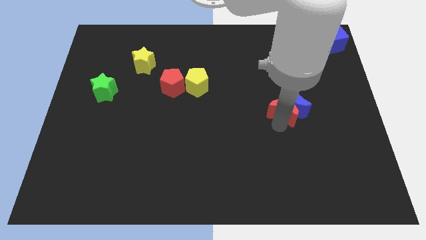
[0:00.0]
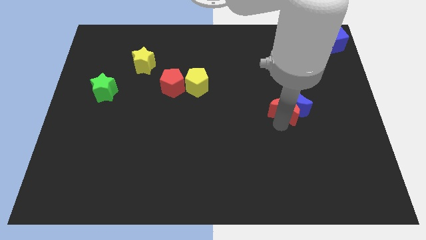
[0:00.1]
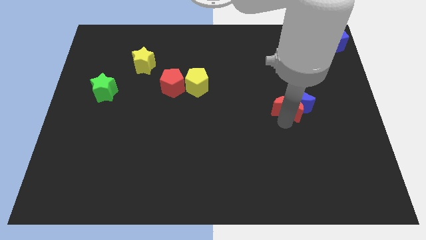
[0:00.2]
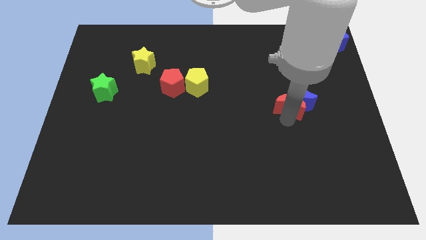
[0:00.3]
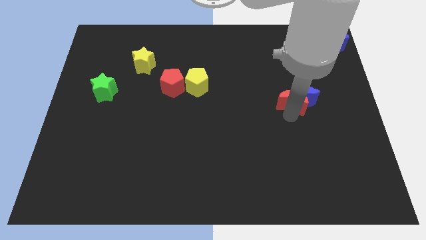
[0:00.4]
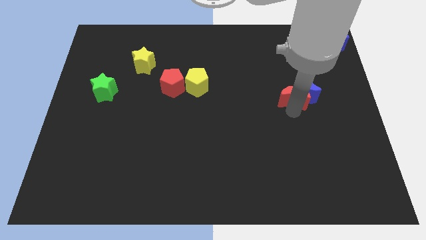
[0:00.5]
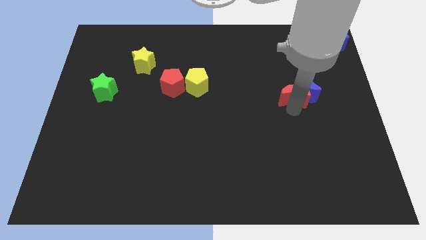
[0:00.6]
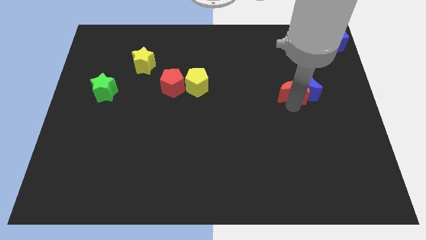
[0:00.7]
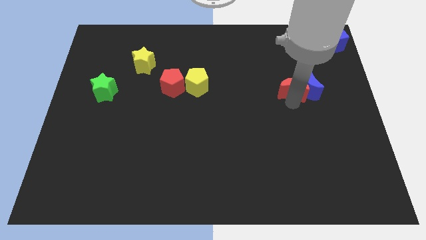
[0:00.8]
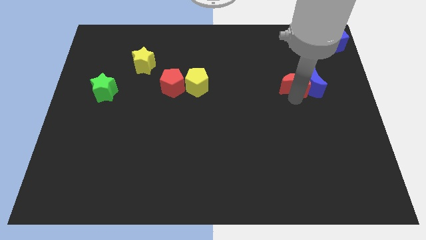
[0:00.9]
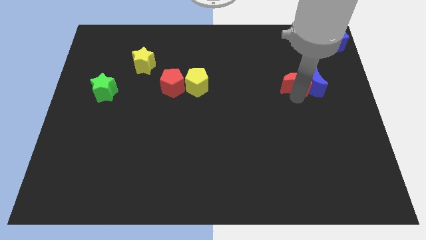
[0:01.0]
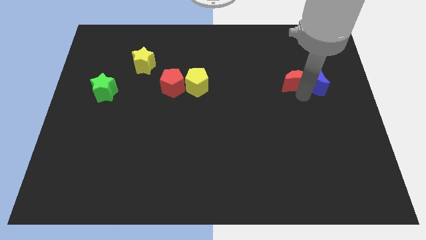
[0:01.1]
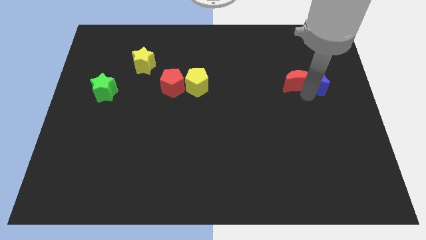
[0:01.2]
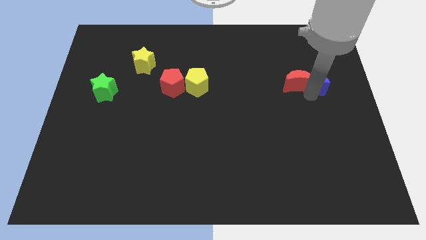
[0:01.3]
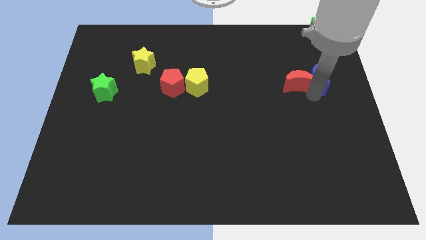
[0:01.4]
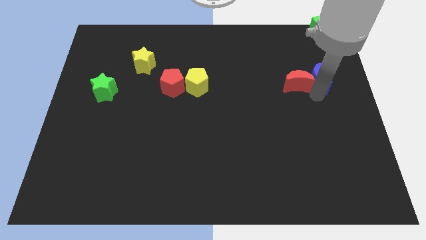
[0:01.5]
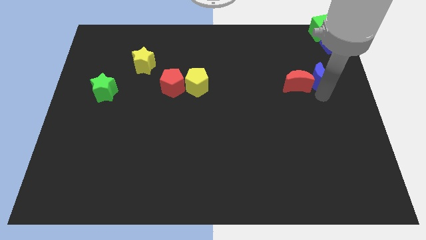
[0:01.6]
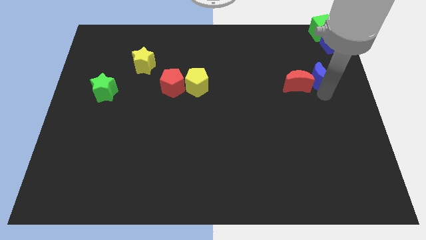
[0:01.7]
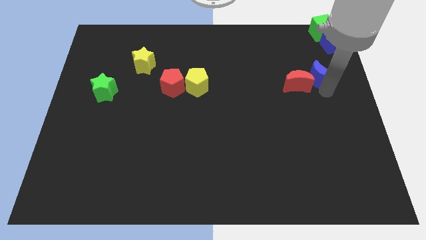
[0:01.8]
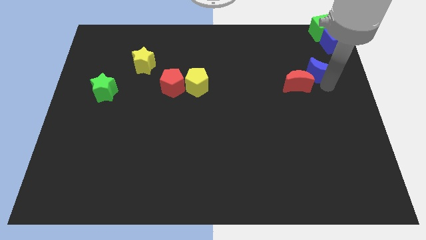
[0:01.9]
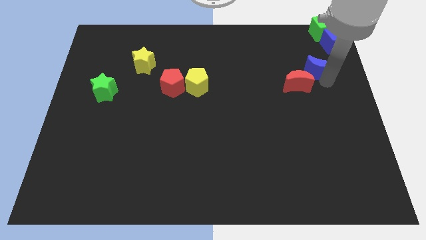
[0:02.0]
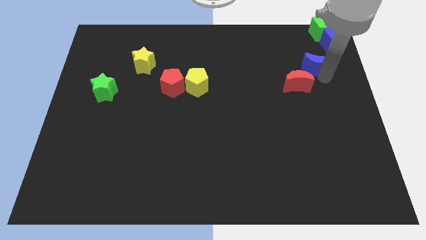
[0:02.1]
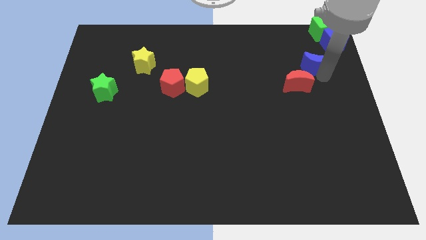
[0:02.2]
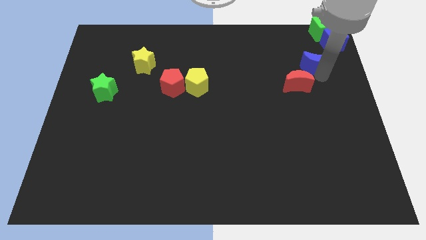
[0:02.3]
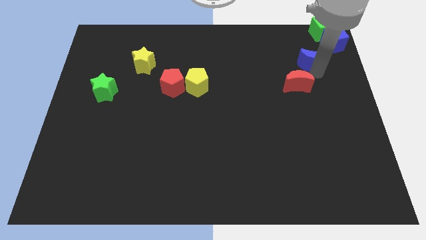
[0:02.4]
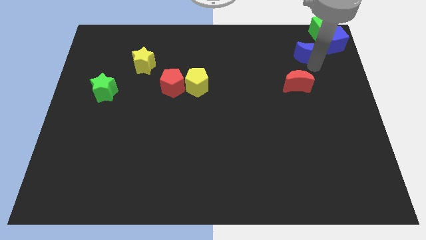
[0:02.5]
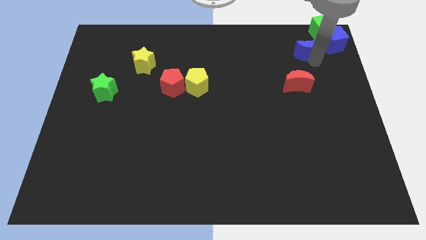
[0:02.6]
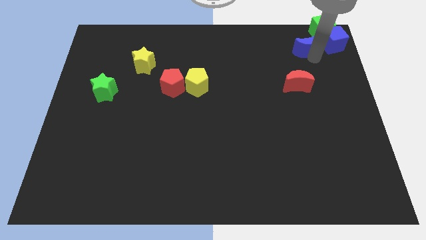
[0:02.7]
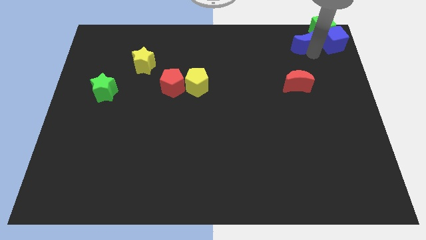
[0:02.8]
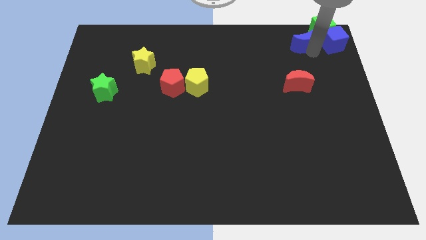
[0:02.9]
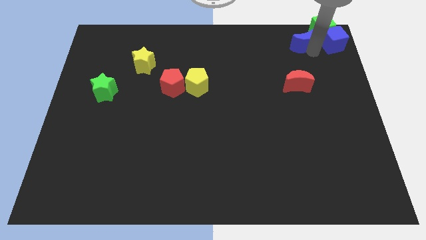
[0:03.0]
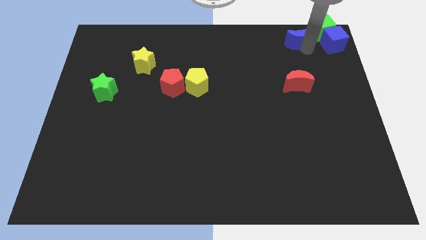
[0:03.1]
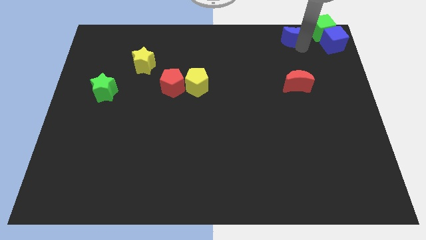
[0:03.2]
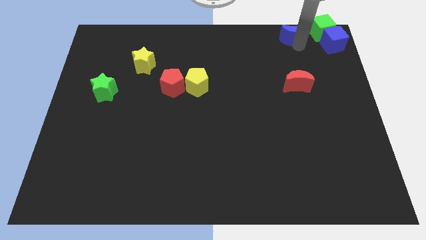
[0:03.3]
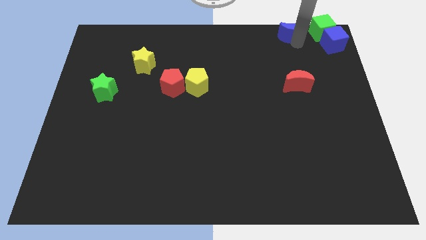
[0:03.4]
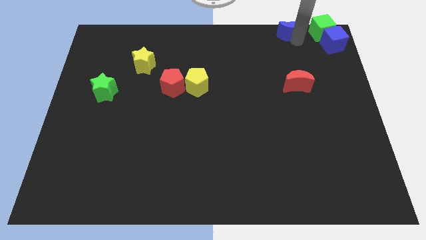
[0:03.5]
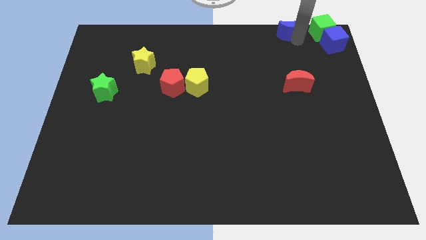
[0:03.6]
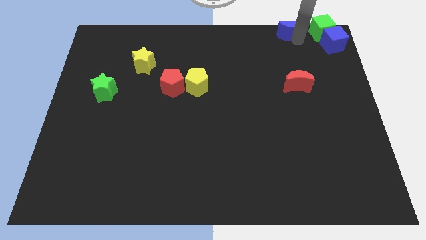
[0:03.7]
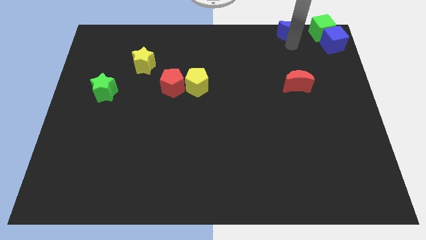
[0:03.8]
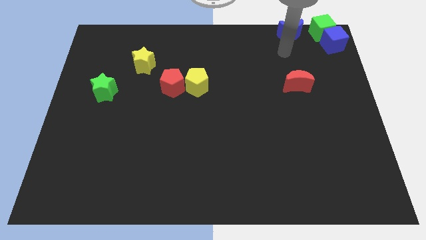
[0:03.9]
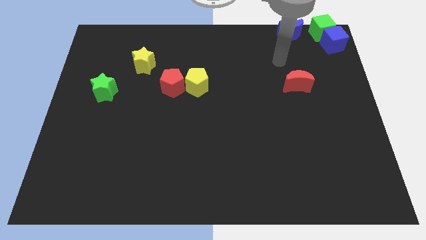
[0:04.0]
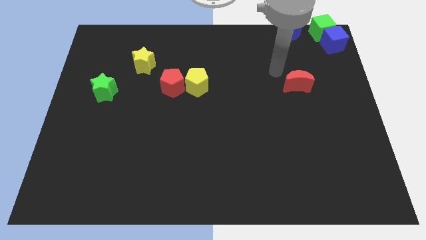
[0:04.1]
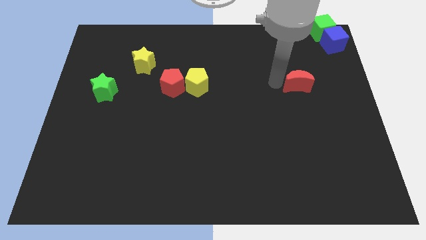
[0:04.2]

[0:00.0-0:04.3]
place blue crescent on left side of green cube

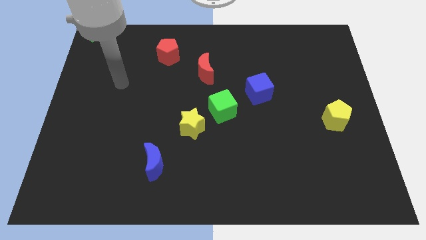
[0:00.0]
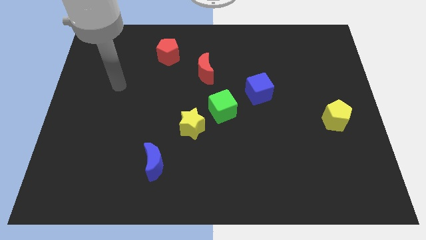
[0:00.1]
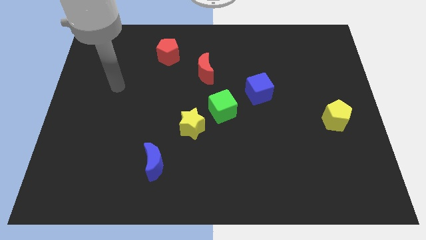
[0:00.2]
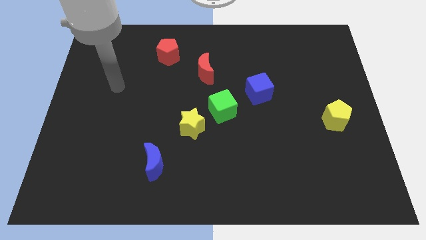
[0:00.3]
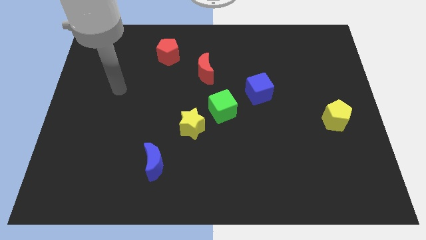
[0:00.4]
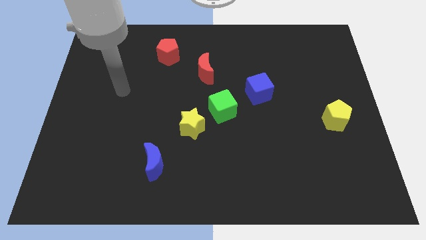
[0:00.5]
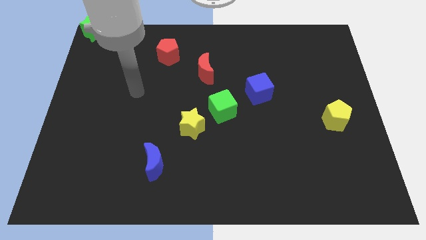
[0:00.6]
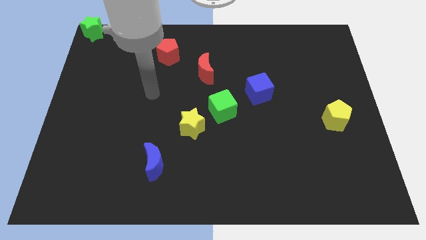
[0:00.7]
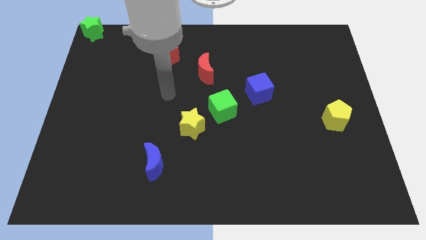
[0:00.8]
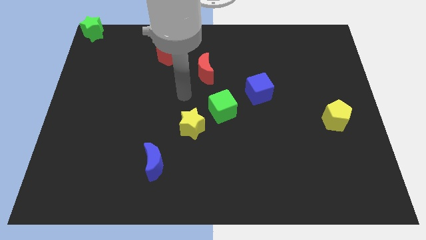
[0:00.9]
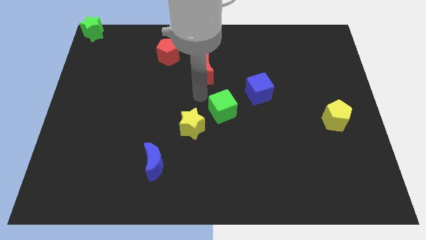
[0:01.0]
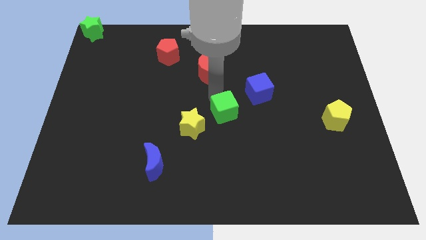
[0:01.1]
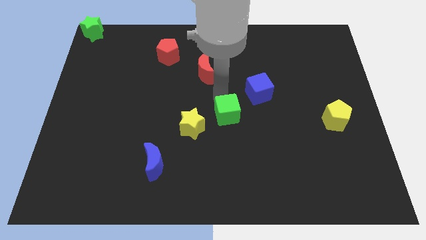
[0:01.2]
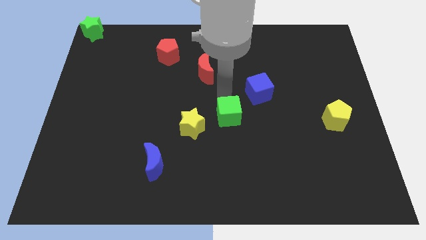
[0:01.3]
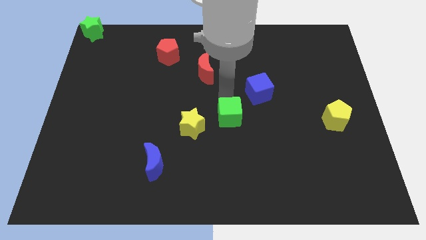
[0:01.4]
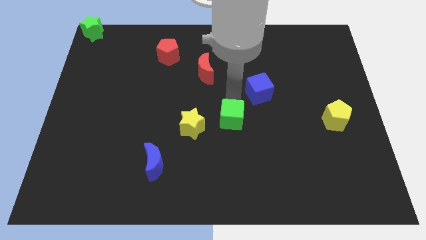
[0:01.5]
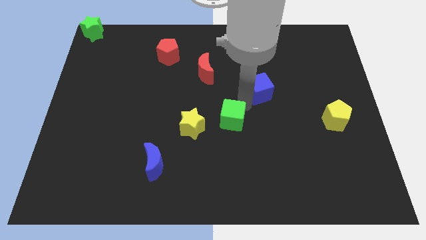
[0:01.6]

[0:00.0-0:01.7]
place your arm in between three blocks

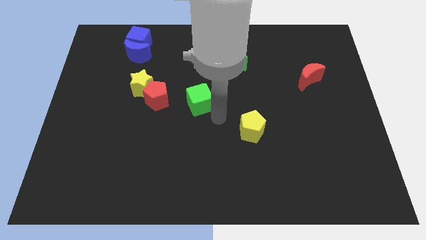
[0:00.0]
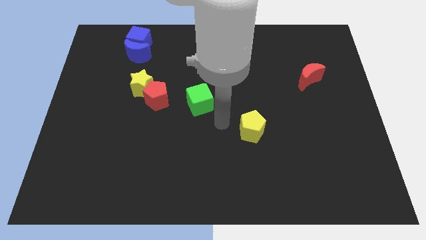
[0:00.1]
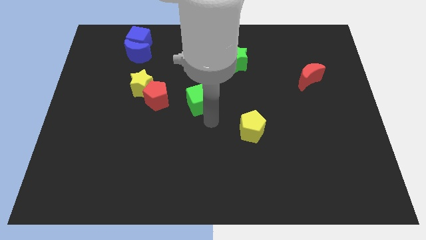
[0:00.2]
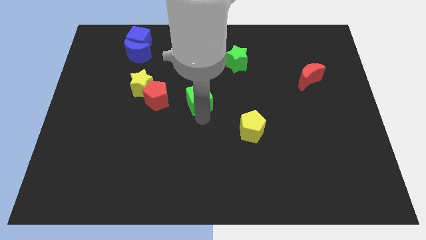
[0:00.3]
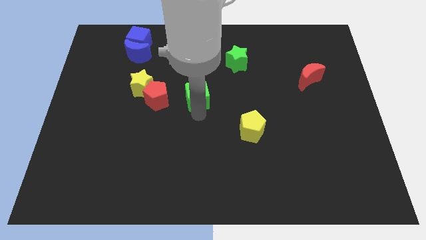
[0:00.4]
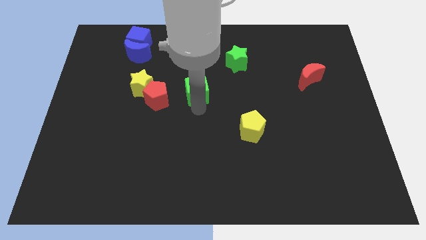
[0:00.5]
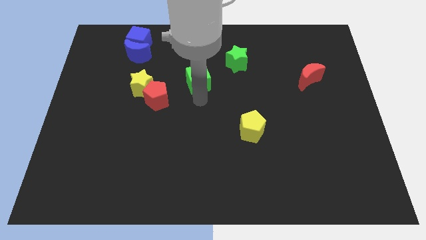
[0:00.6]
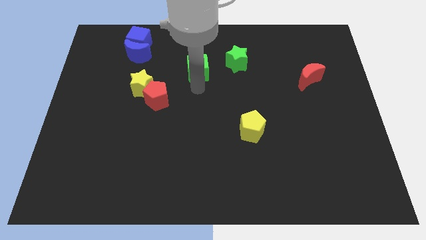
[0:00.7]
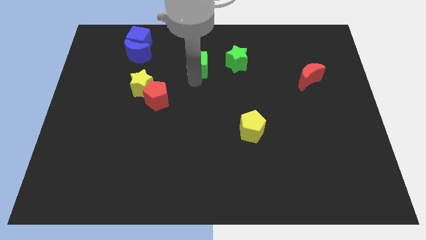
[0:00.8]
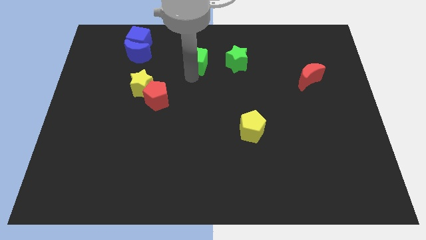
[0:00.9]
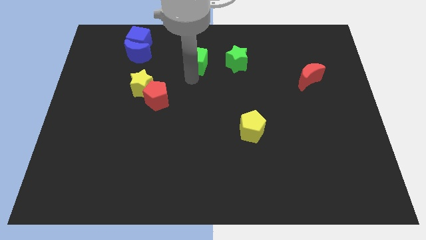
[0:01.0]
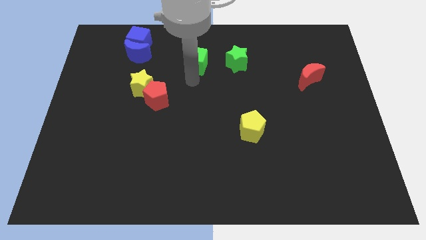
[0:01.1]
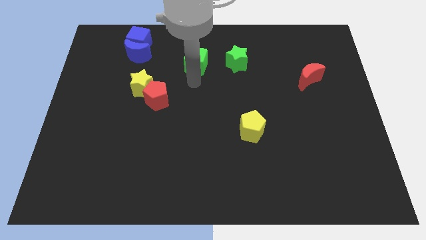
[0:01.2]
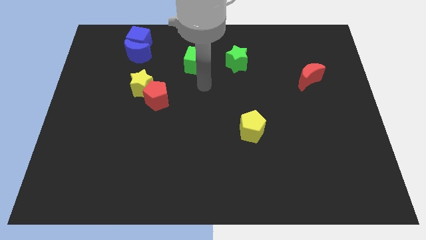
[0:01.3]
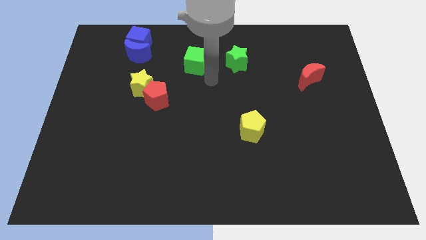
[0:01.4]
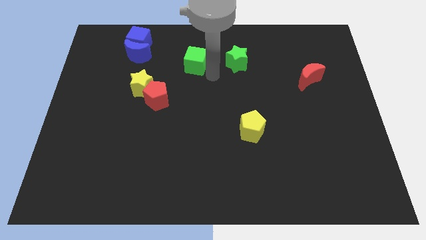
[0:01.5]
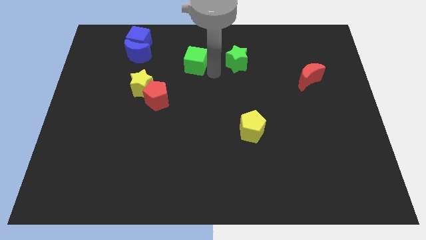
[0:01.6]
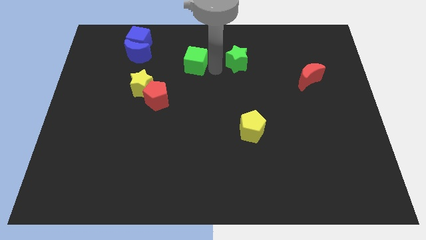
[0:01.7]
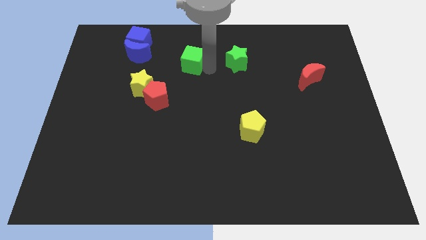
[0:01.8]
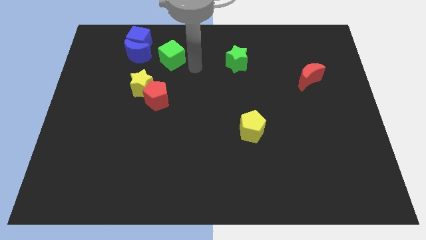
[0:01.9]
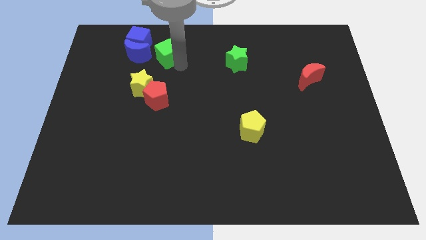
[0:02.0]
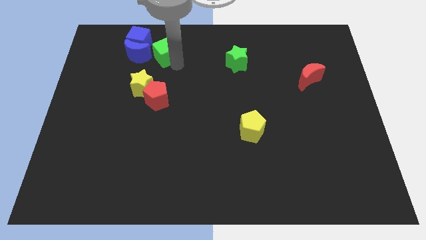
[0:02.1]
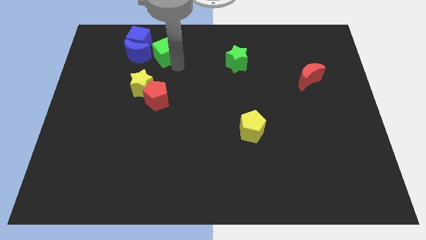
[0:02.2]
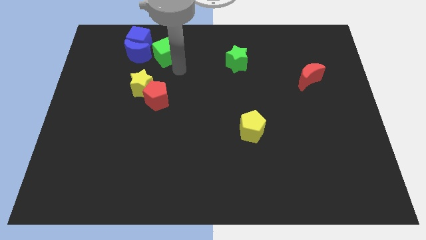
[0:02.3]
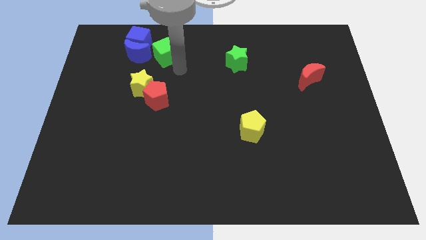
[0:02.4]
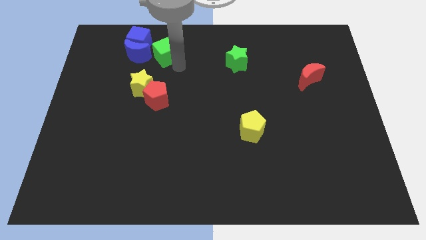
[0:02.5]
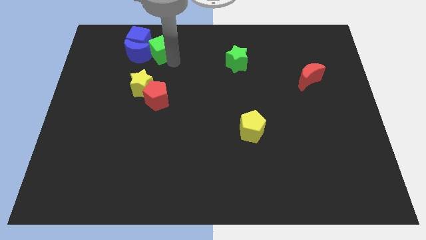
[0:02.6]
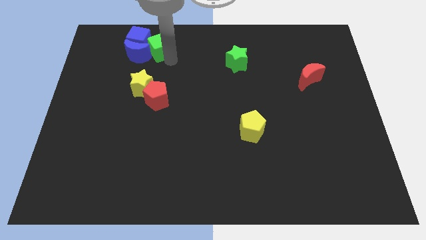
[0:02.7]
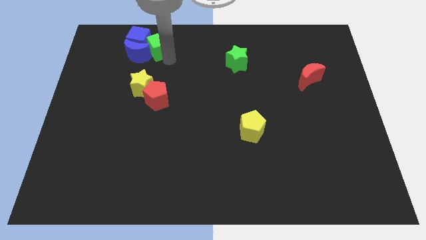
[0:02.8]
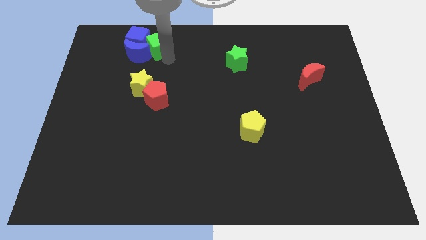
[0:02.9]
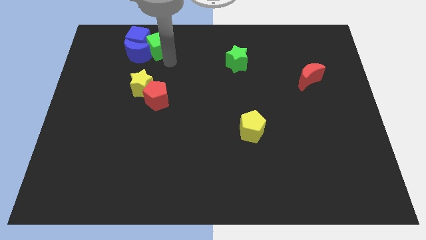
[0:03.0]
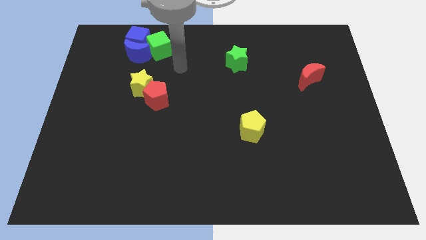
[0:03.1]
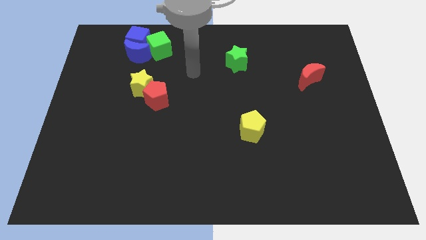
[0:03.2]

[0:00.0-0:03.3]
push the green cube into blue cube
